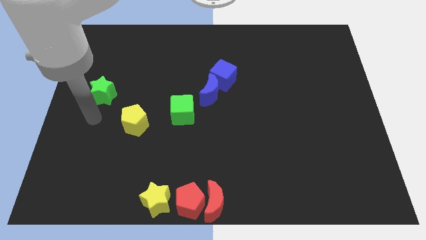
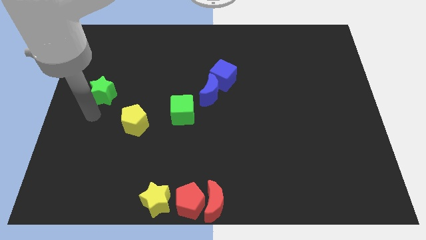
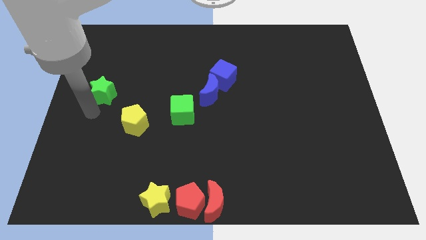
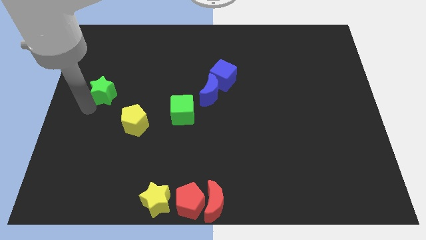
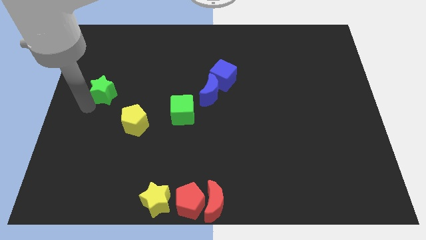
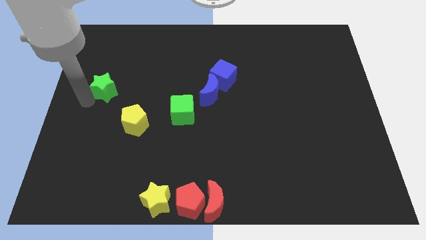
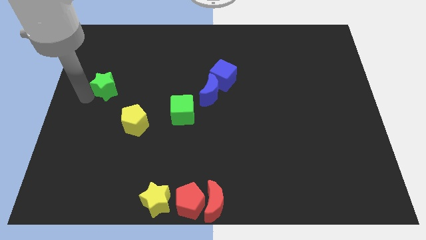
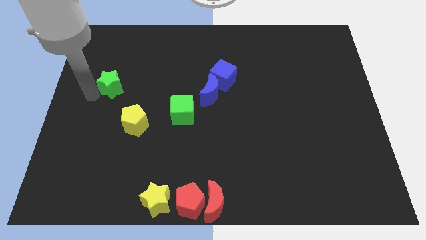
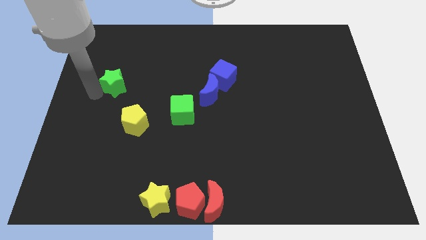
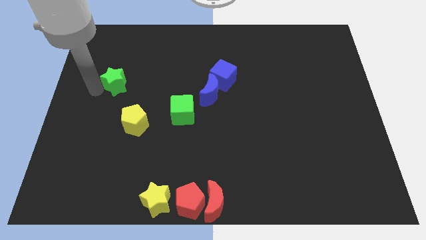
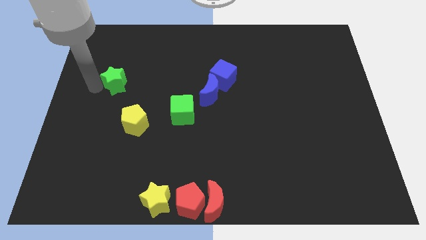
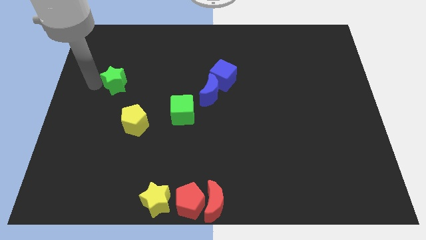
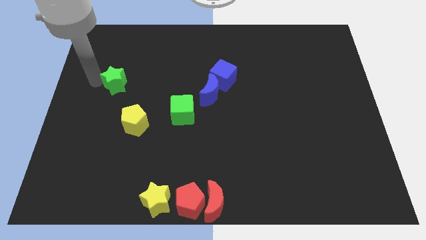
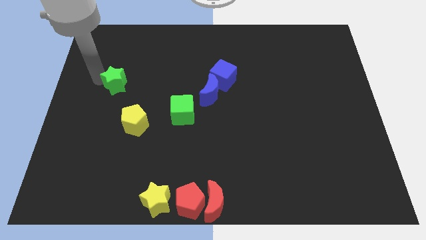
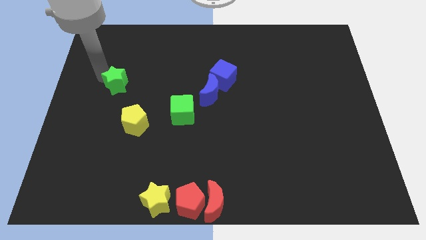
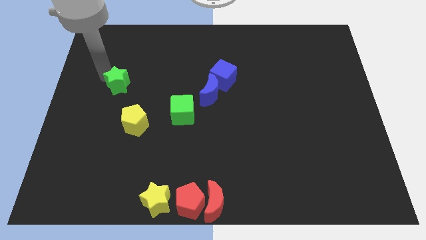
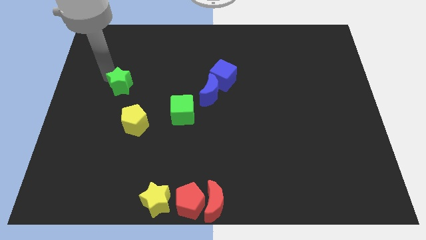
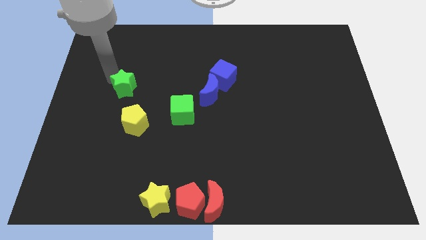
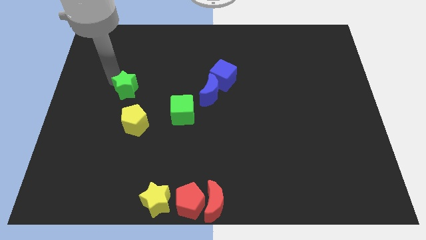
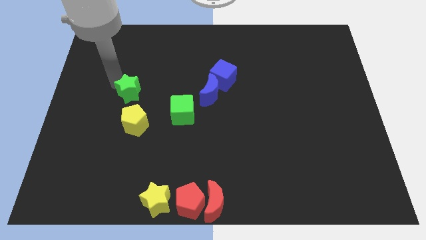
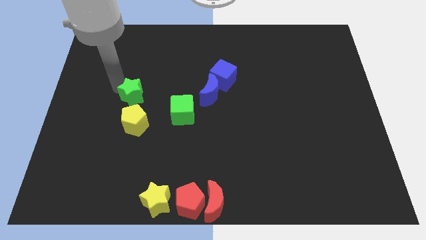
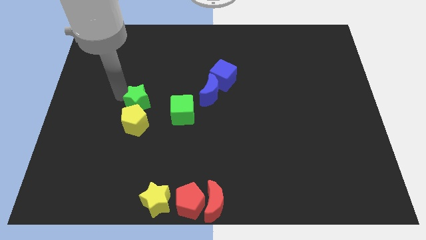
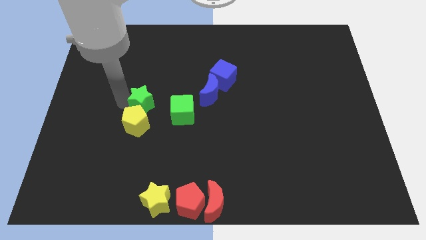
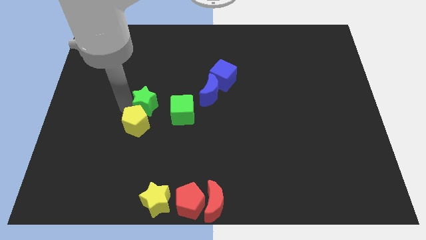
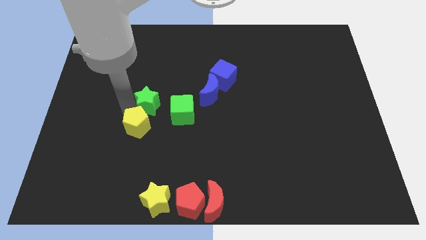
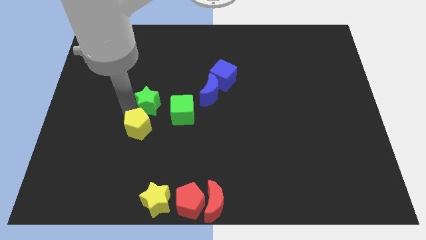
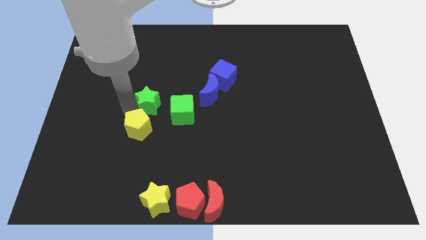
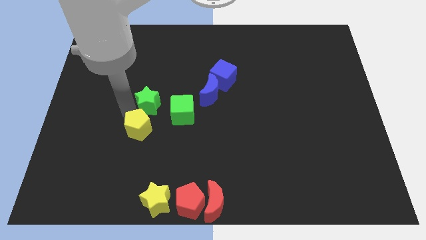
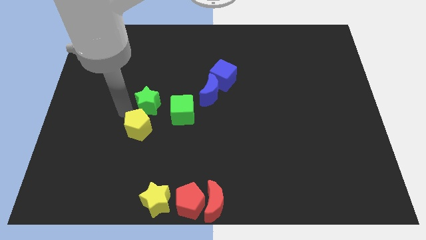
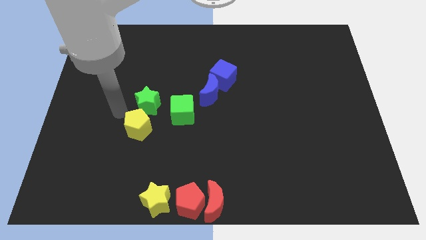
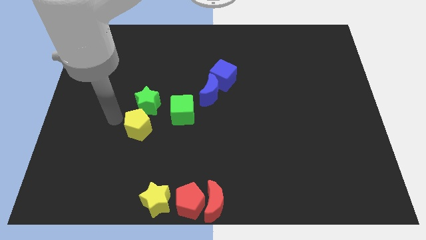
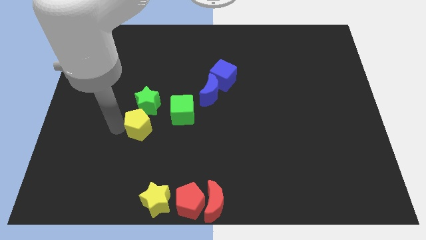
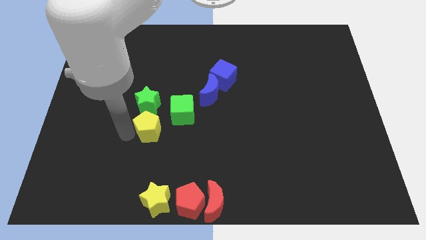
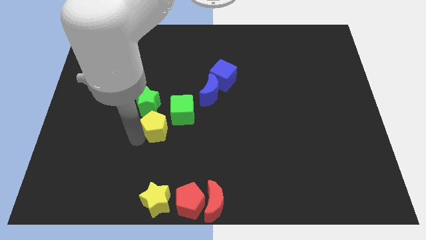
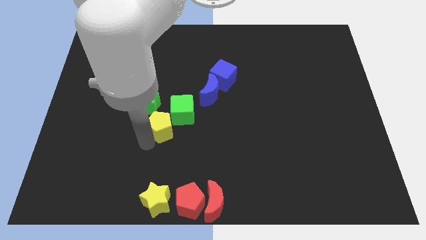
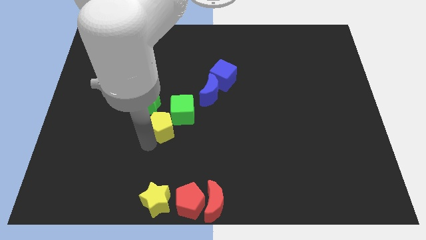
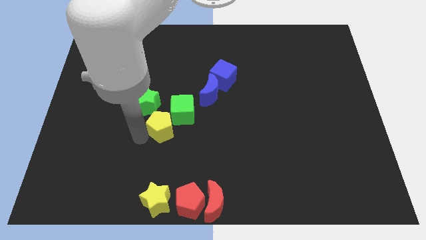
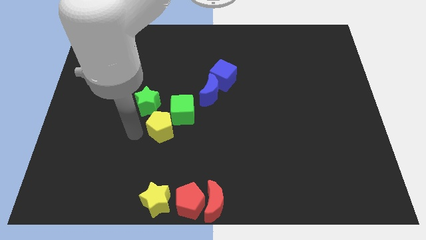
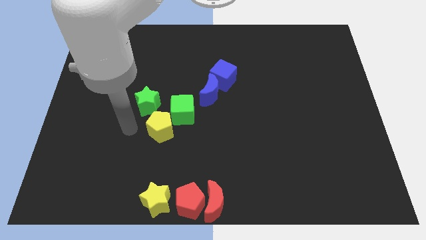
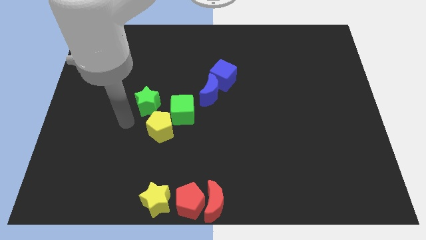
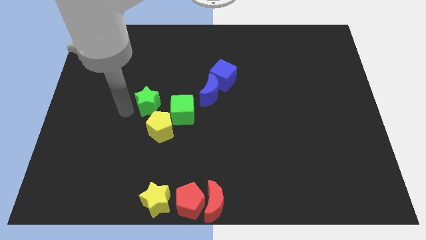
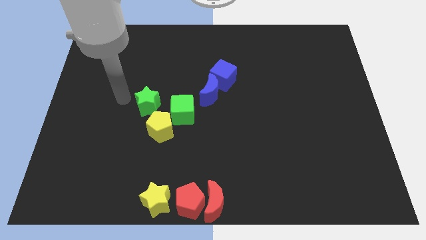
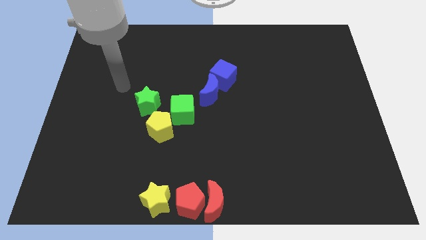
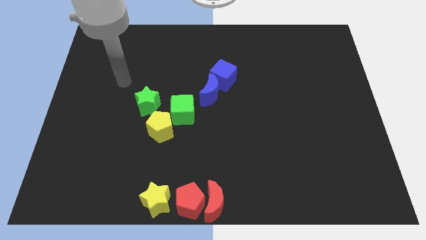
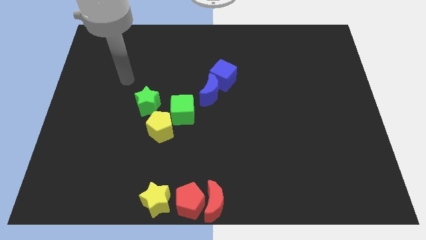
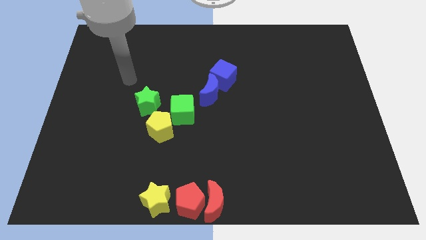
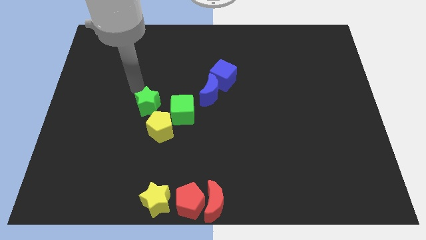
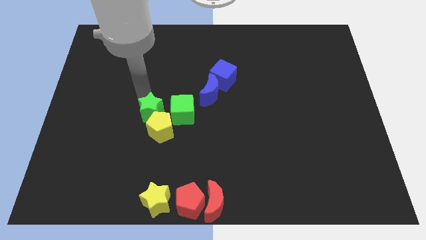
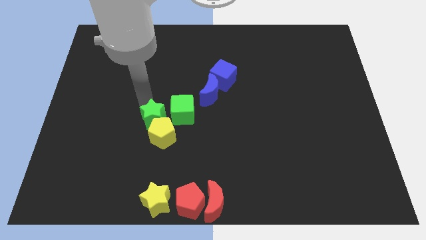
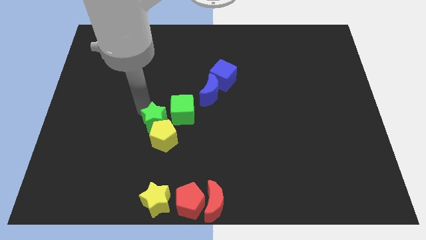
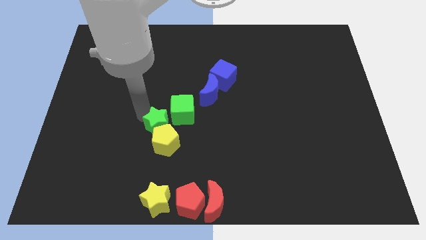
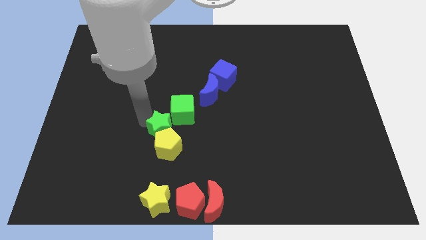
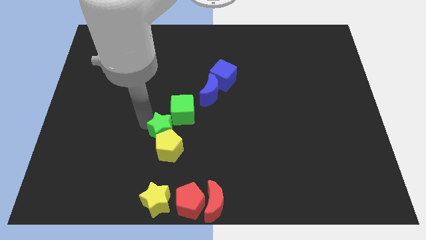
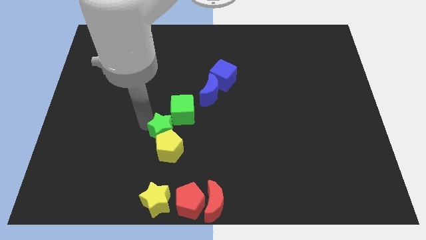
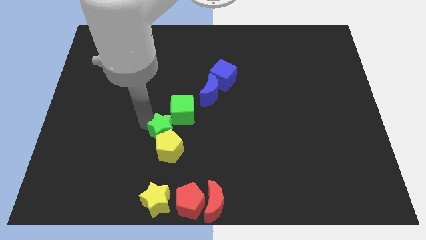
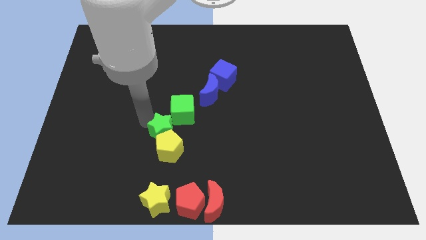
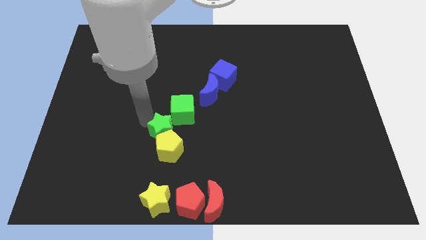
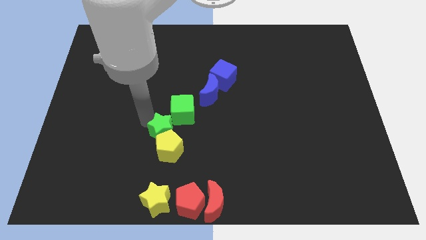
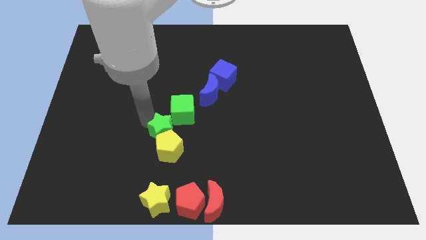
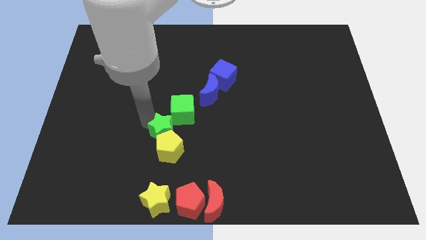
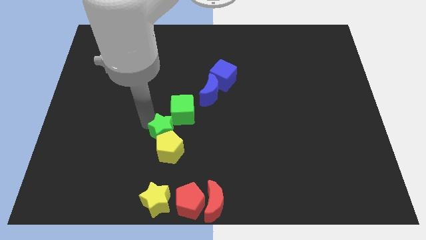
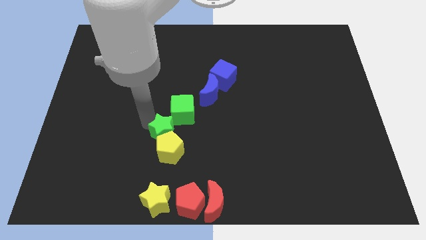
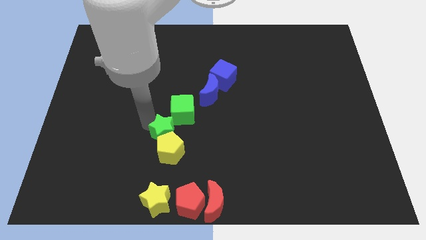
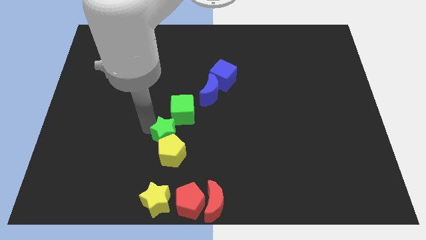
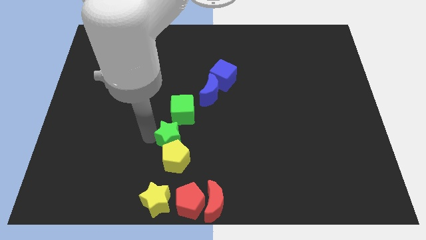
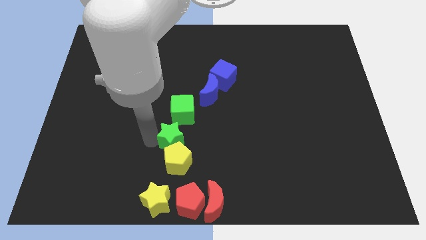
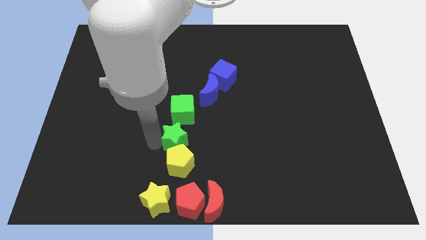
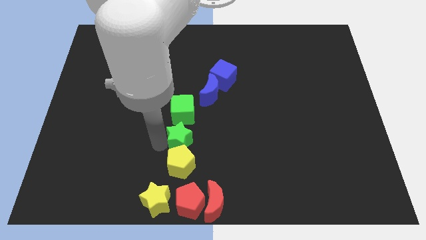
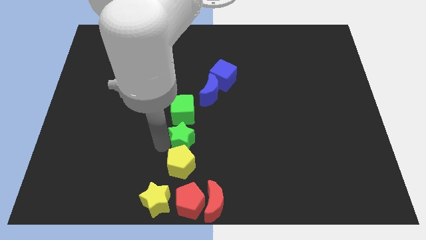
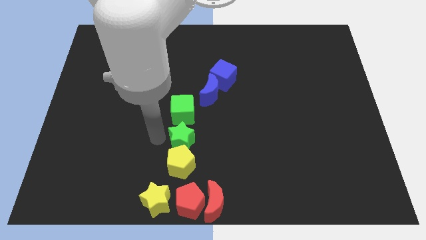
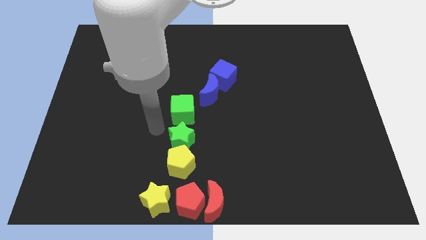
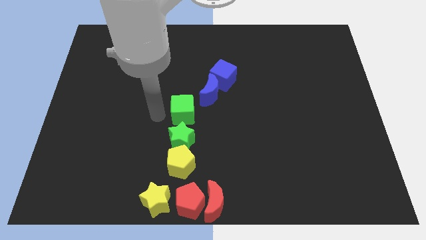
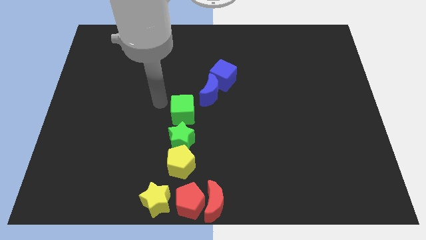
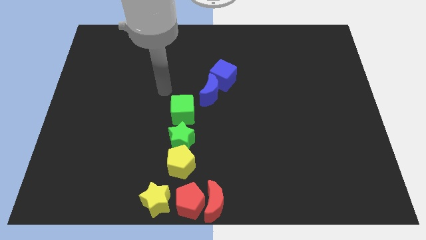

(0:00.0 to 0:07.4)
move the green star and yellow pentagon below the green cube

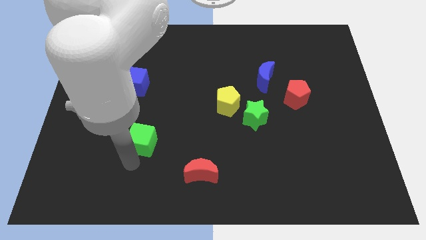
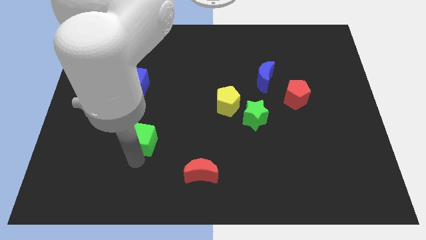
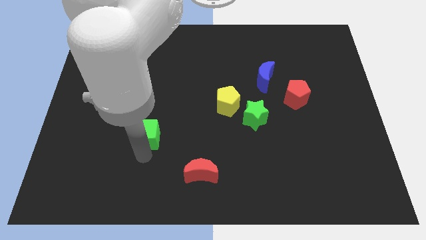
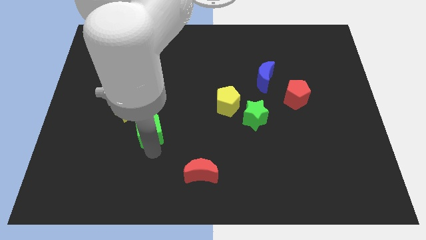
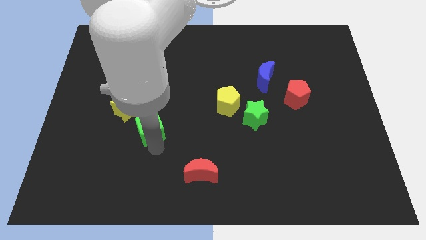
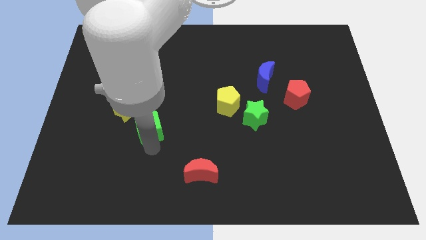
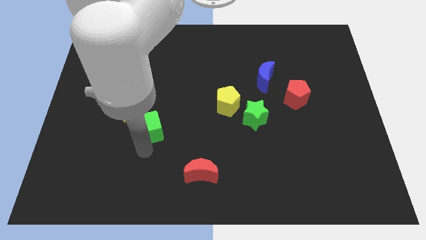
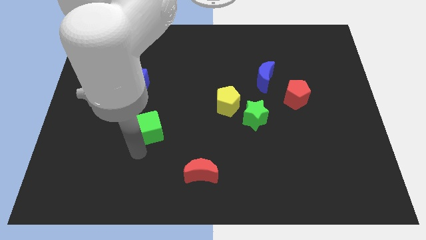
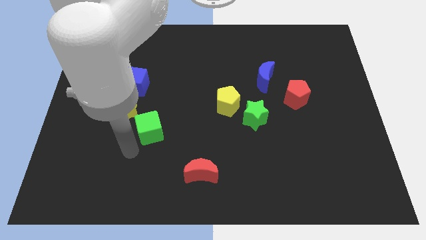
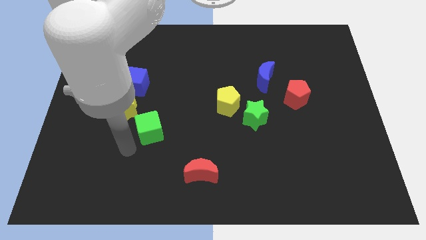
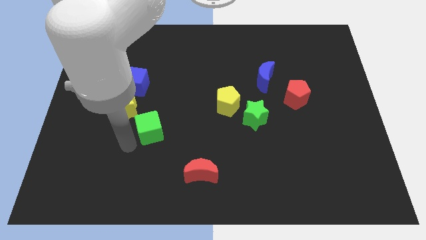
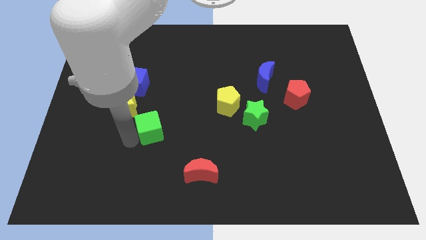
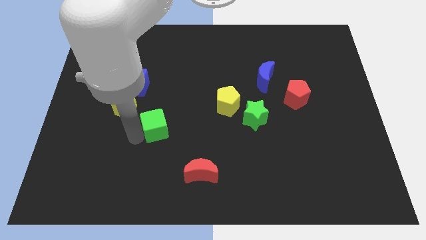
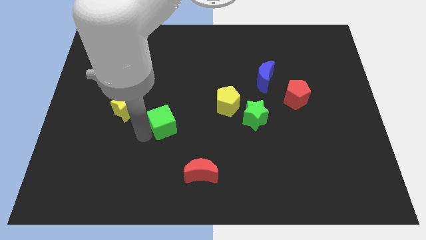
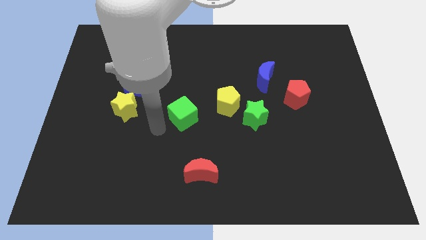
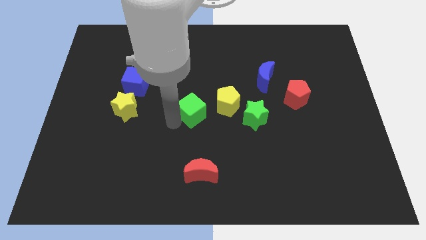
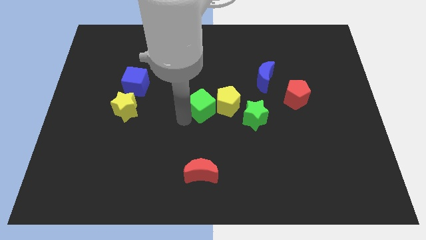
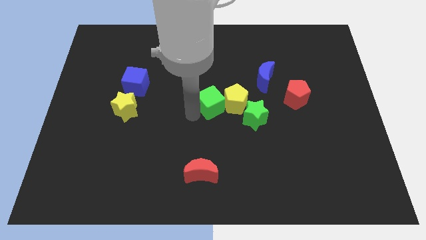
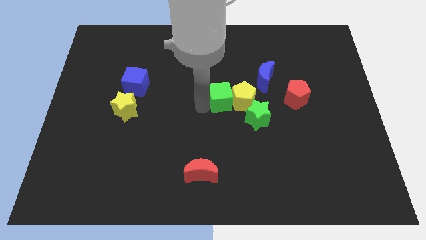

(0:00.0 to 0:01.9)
move the green cube into the yellow pentagon
